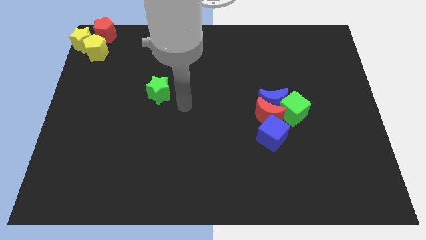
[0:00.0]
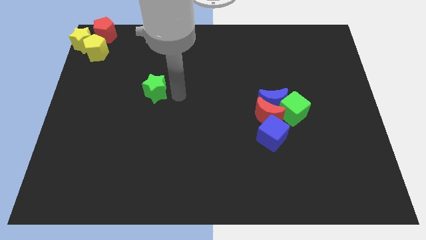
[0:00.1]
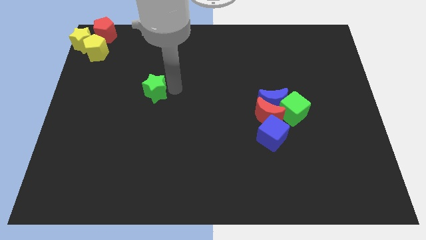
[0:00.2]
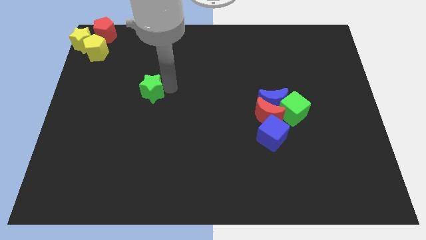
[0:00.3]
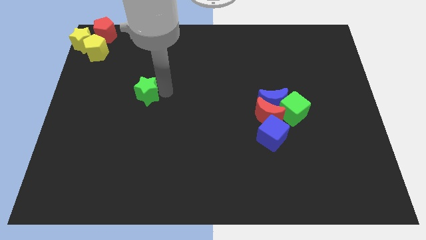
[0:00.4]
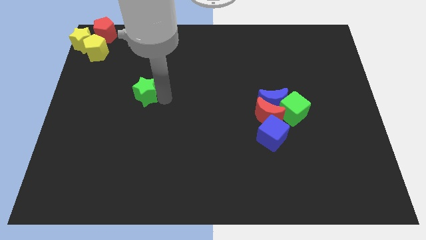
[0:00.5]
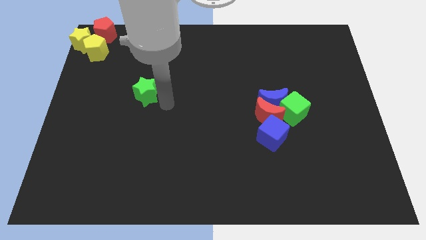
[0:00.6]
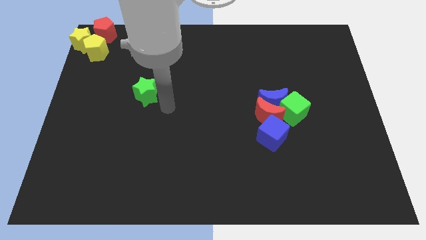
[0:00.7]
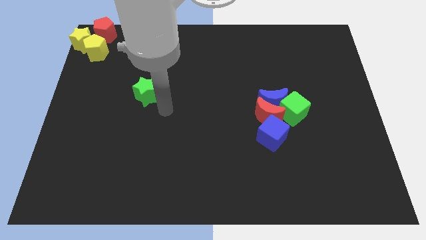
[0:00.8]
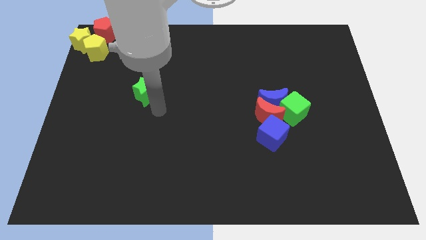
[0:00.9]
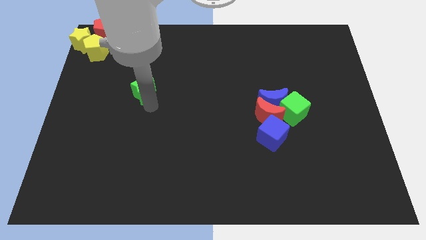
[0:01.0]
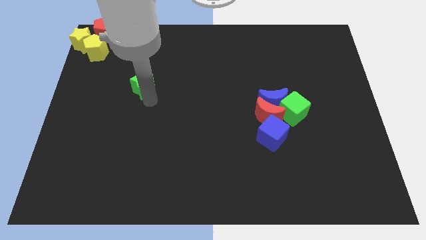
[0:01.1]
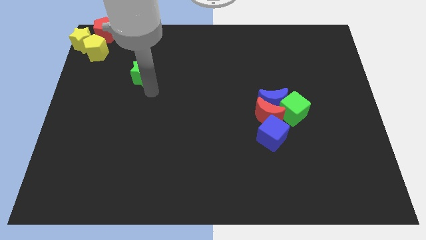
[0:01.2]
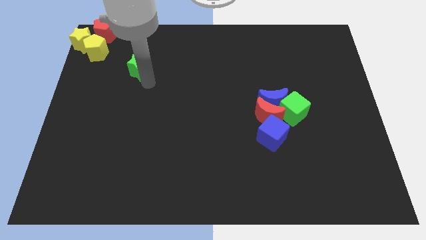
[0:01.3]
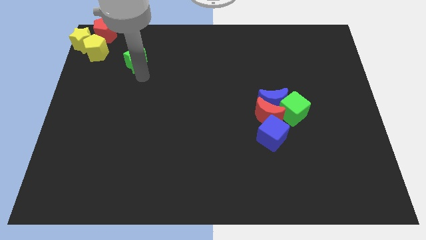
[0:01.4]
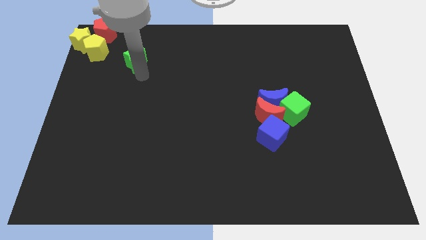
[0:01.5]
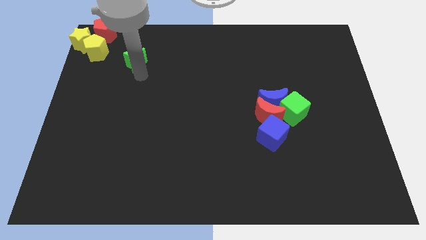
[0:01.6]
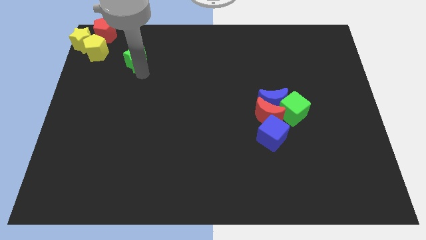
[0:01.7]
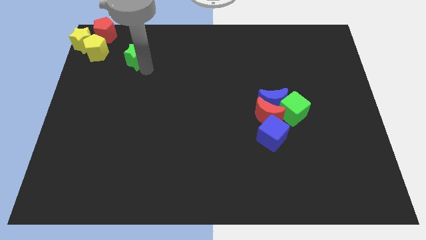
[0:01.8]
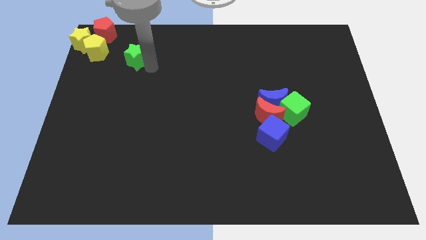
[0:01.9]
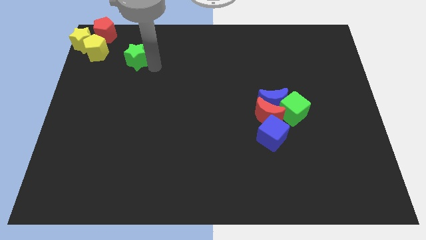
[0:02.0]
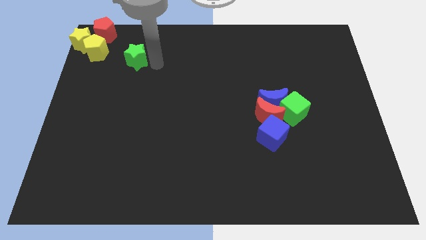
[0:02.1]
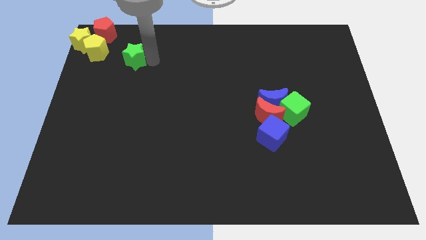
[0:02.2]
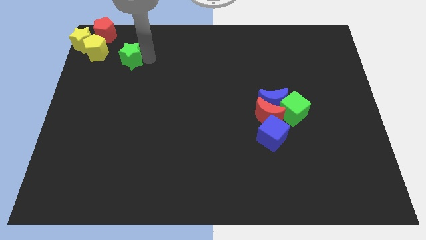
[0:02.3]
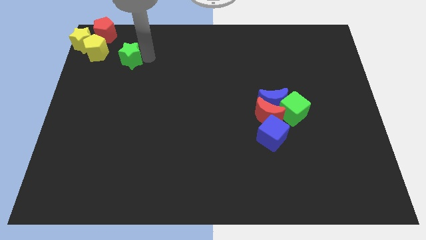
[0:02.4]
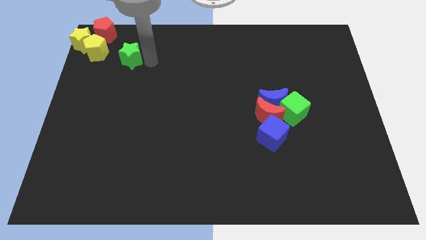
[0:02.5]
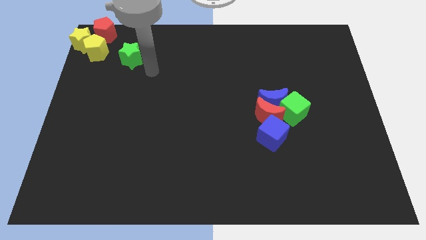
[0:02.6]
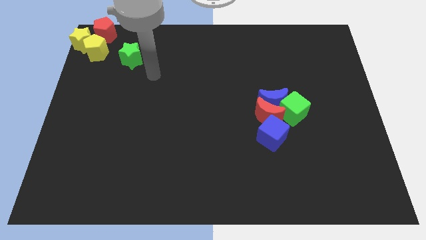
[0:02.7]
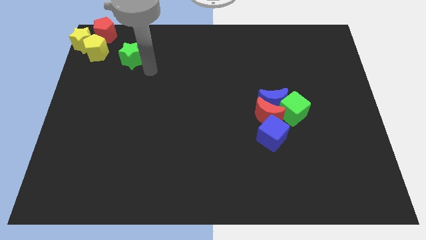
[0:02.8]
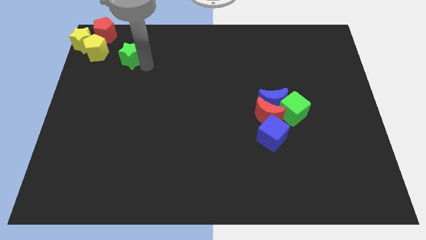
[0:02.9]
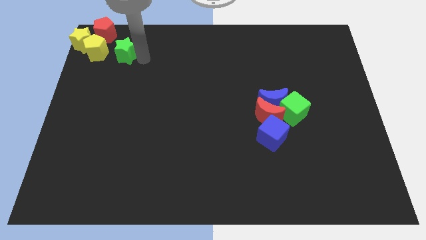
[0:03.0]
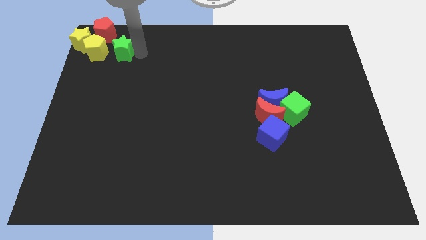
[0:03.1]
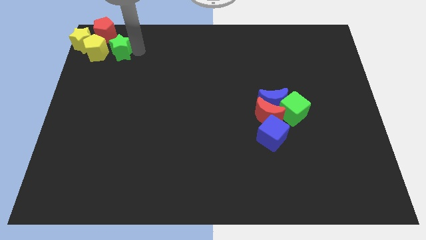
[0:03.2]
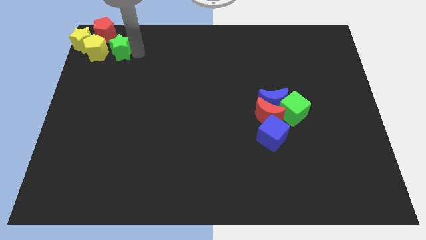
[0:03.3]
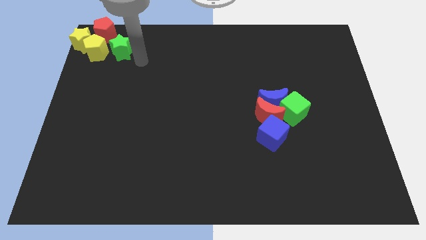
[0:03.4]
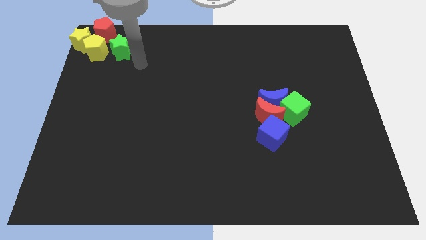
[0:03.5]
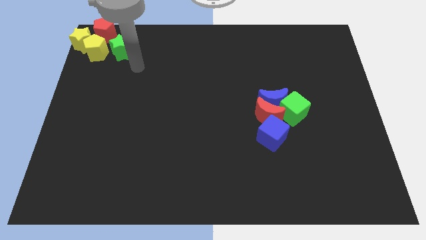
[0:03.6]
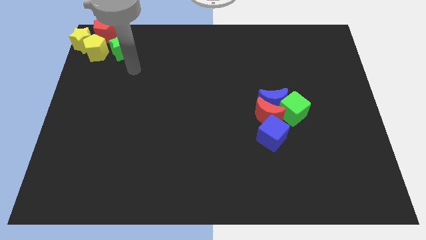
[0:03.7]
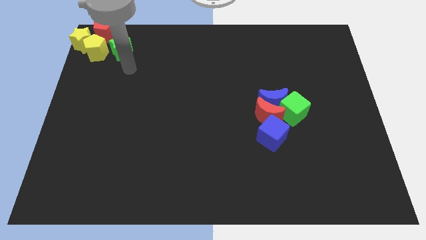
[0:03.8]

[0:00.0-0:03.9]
push the green star diagonally to the yellow pentagon

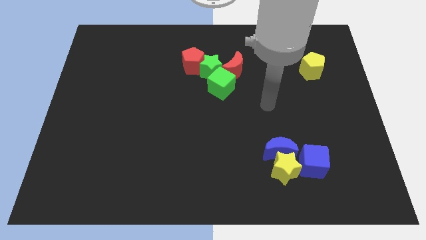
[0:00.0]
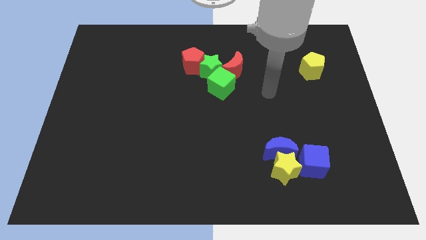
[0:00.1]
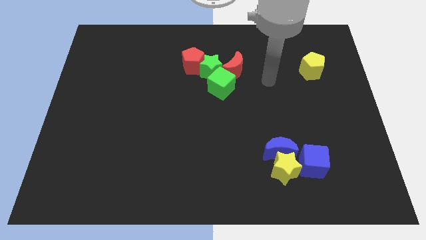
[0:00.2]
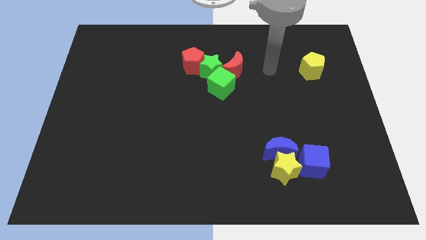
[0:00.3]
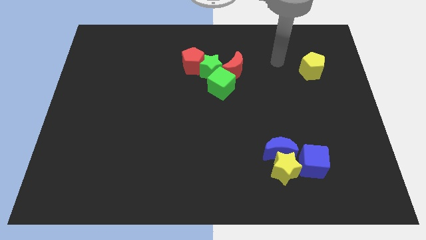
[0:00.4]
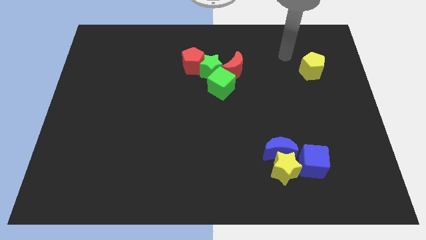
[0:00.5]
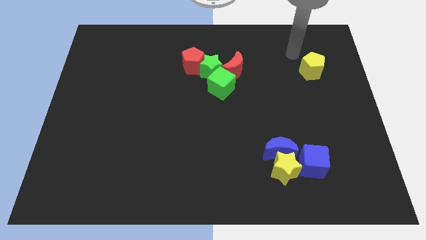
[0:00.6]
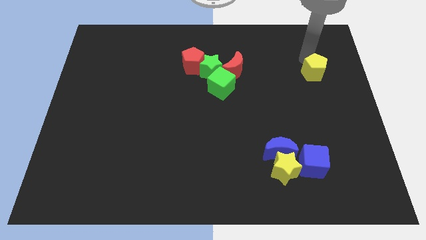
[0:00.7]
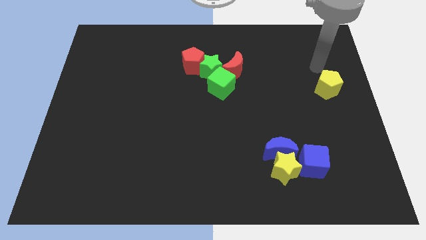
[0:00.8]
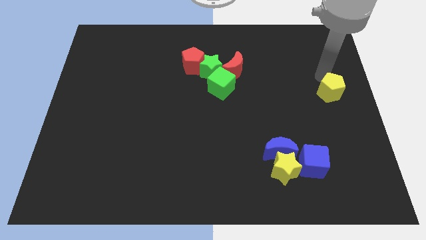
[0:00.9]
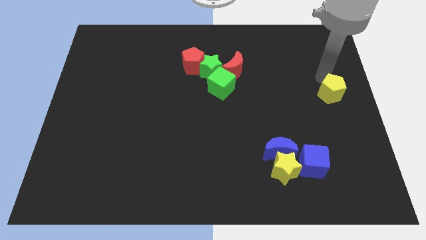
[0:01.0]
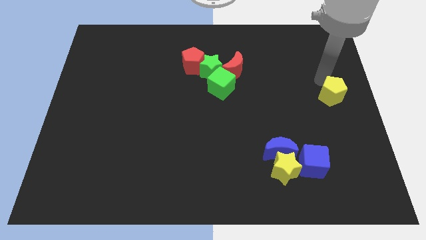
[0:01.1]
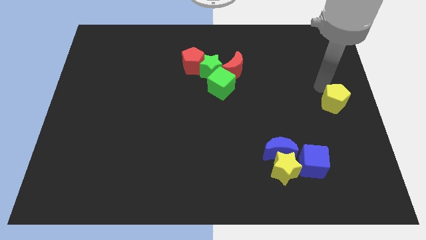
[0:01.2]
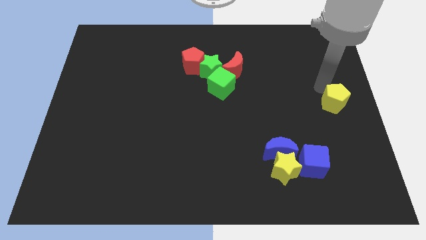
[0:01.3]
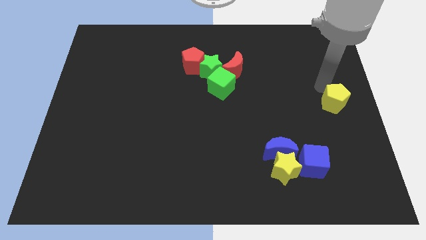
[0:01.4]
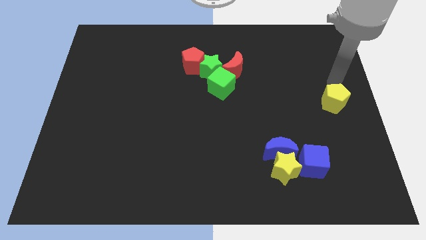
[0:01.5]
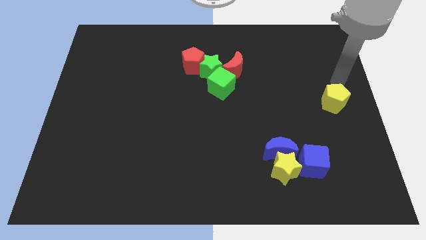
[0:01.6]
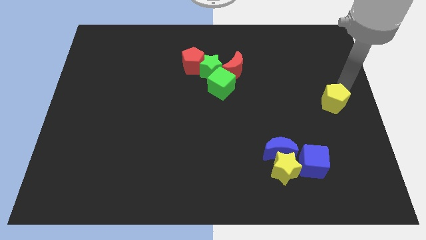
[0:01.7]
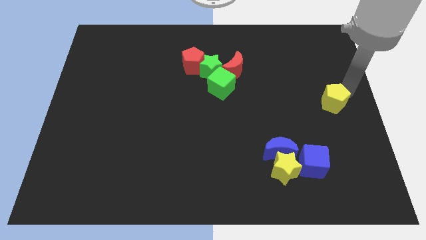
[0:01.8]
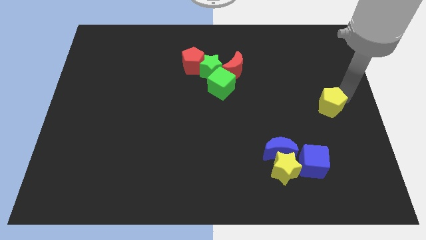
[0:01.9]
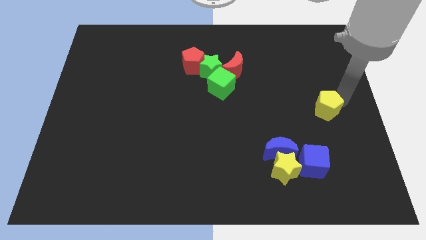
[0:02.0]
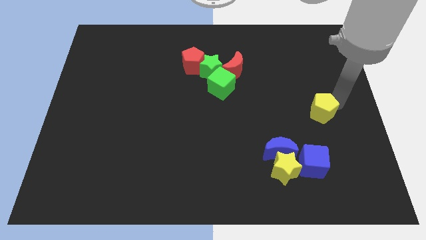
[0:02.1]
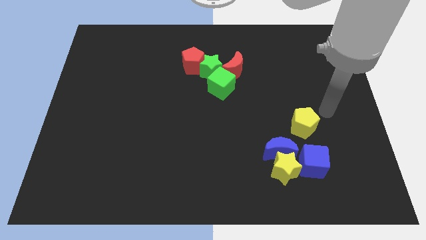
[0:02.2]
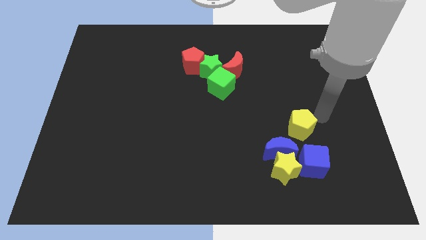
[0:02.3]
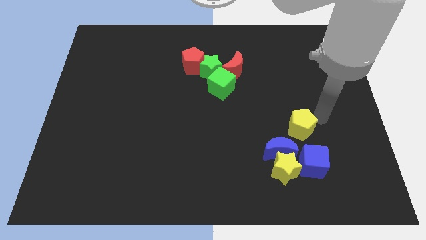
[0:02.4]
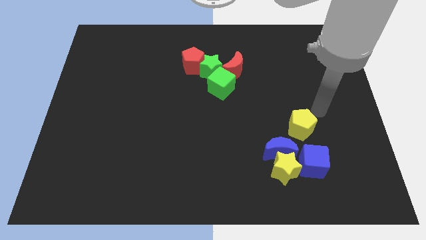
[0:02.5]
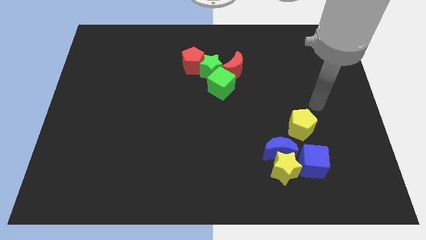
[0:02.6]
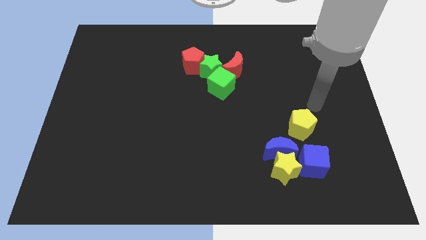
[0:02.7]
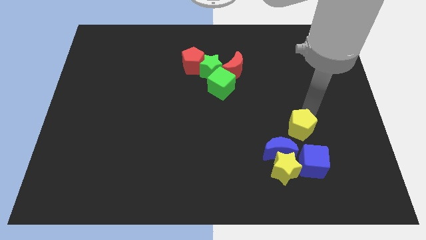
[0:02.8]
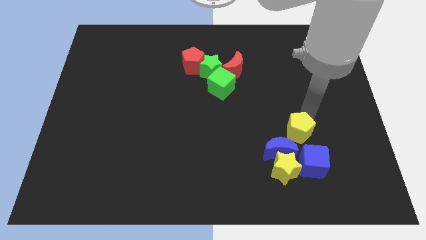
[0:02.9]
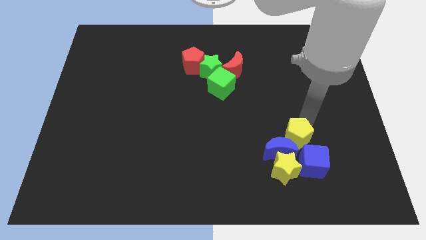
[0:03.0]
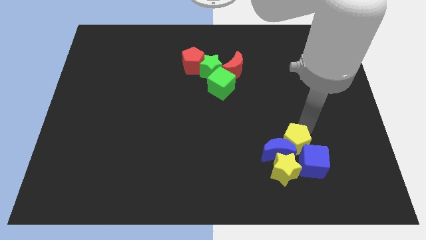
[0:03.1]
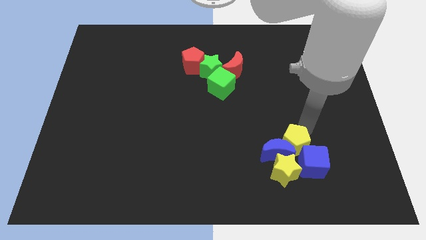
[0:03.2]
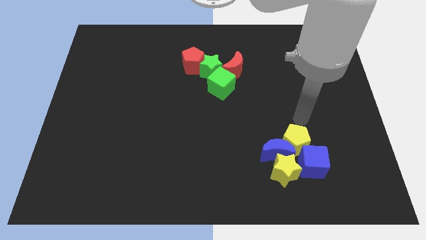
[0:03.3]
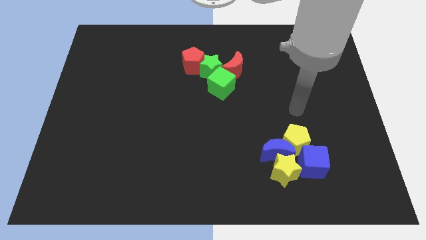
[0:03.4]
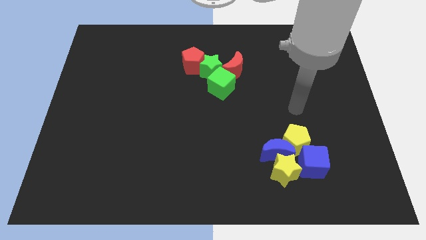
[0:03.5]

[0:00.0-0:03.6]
move yellow pentagon towards the top right of the blue moon

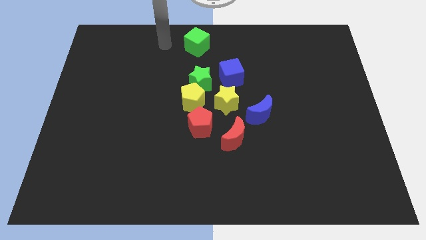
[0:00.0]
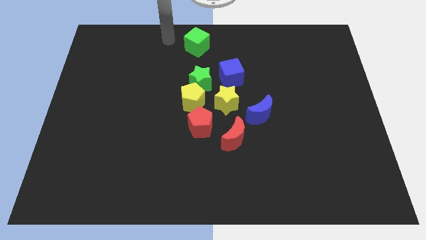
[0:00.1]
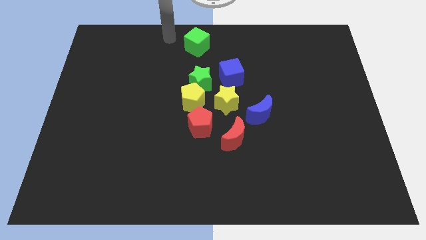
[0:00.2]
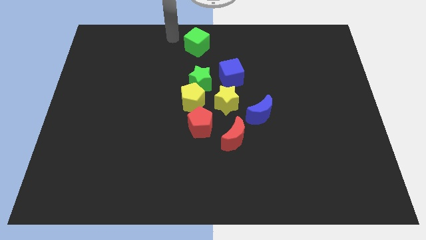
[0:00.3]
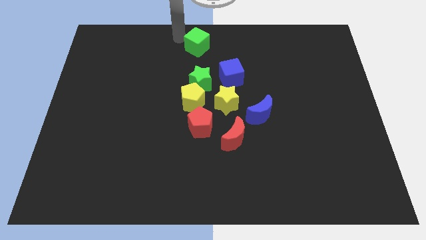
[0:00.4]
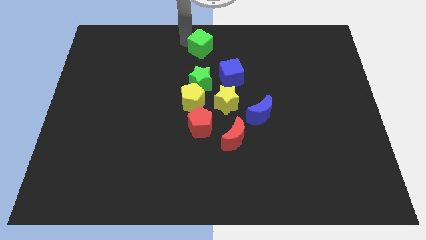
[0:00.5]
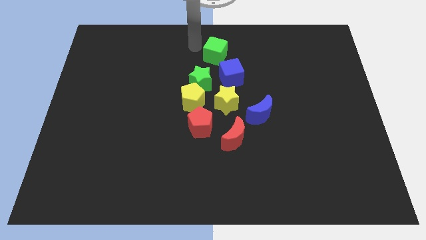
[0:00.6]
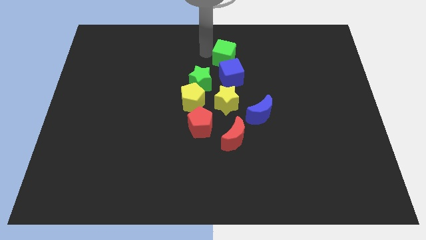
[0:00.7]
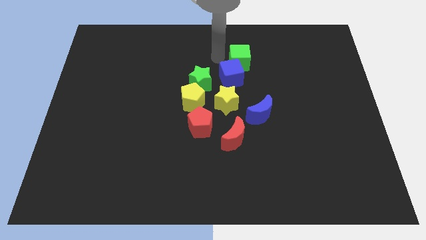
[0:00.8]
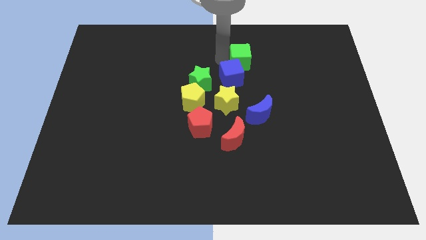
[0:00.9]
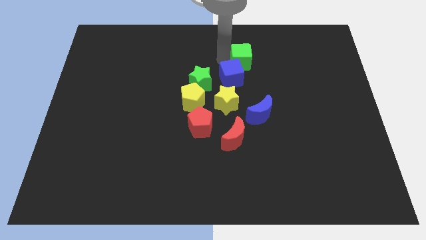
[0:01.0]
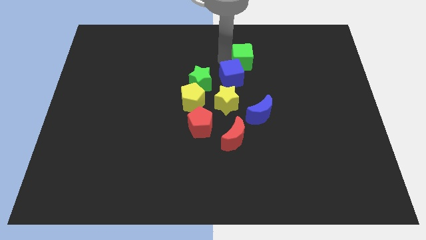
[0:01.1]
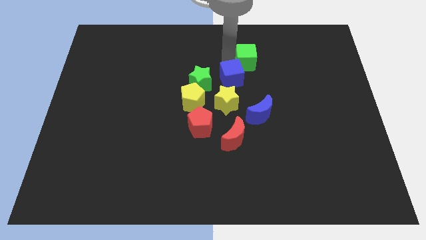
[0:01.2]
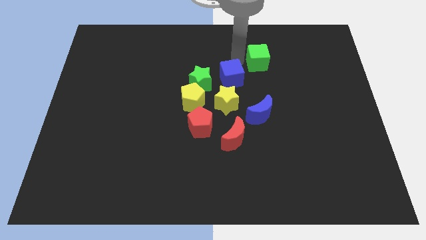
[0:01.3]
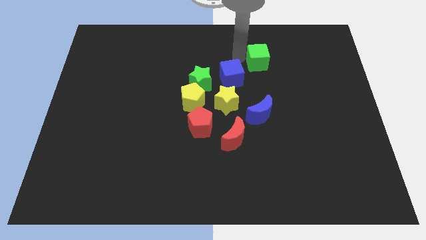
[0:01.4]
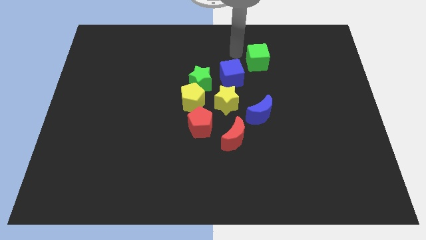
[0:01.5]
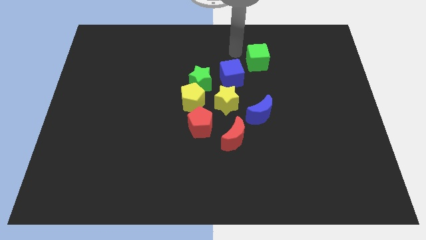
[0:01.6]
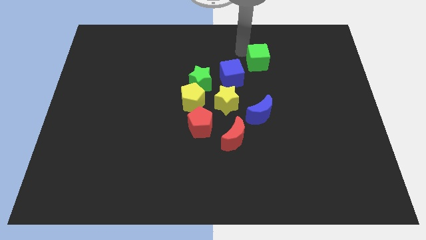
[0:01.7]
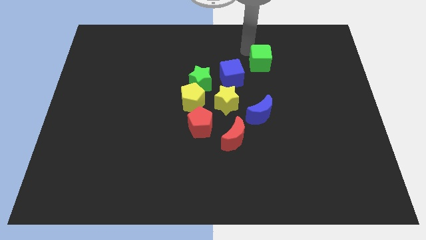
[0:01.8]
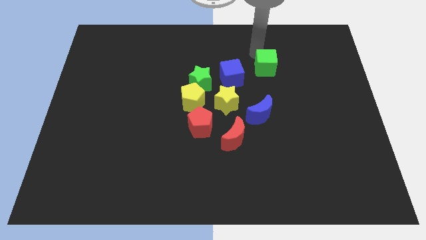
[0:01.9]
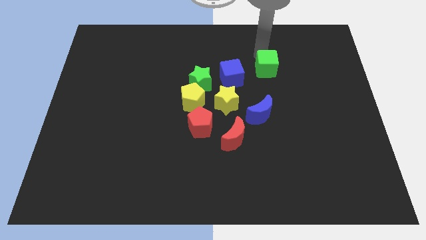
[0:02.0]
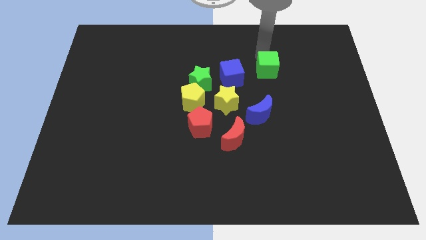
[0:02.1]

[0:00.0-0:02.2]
place the green cube to the right of the blue cube
